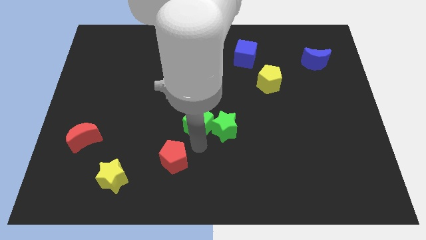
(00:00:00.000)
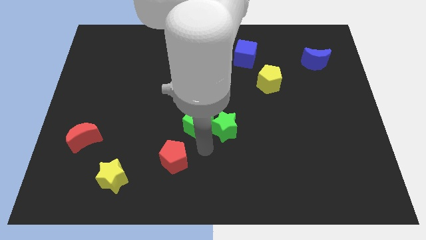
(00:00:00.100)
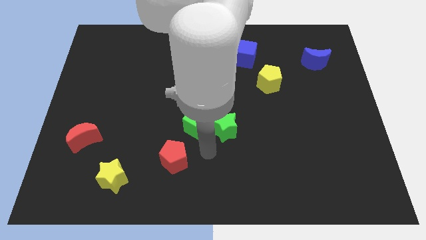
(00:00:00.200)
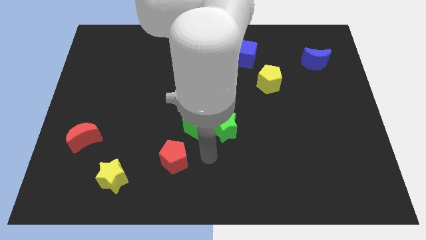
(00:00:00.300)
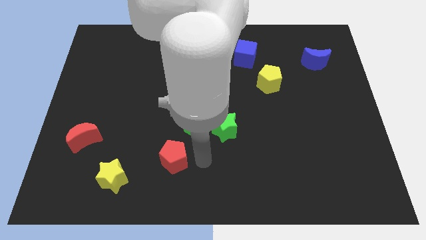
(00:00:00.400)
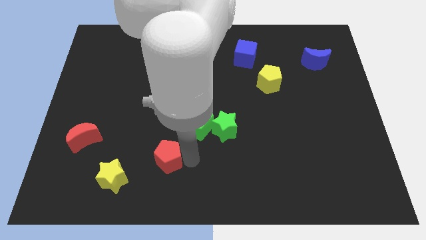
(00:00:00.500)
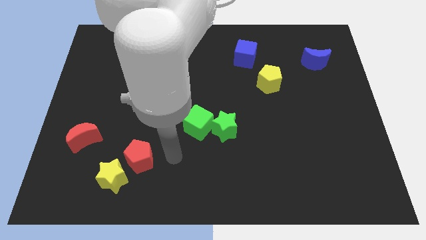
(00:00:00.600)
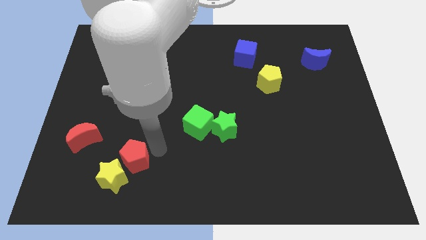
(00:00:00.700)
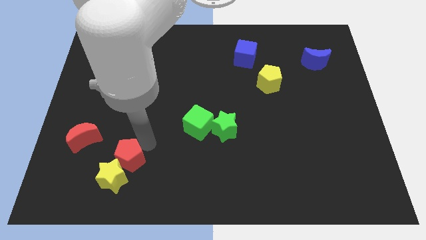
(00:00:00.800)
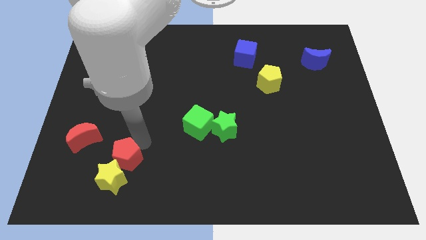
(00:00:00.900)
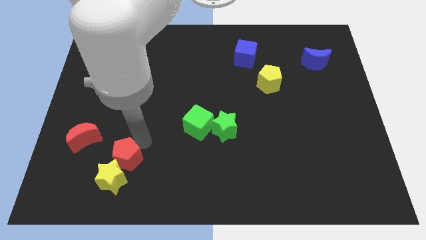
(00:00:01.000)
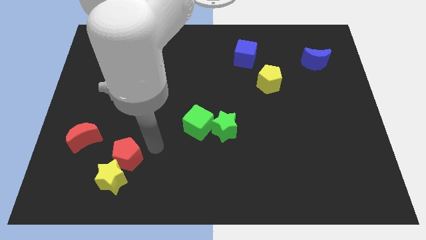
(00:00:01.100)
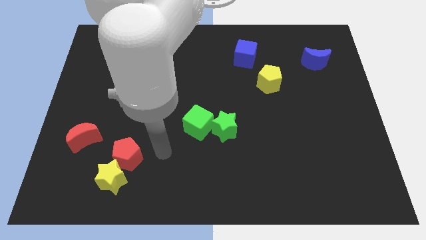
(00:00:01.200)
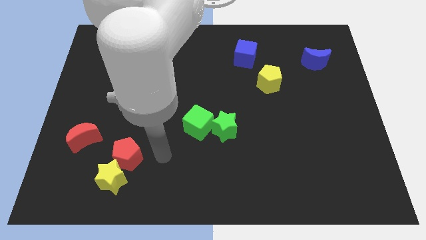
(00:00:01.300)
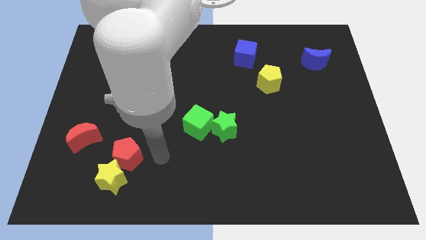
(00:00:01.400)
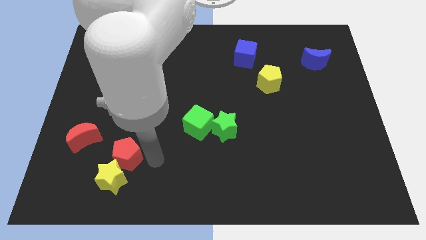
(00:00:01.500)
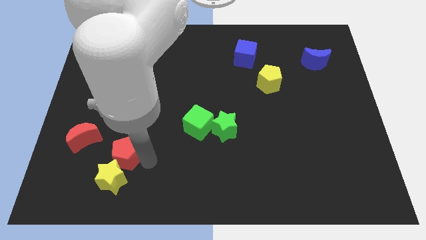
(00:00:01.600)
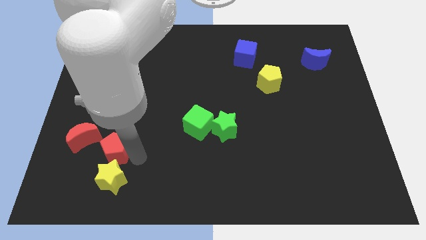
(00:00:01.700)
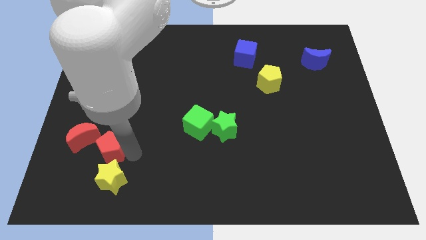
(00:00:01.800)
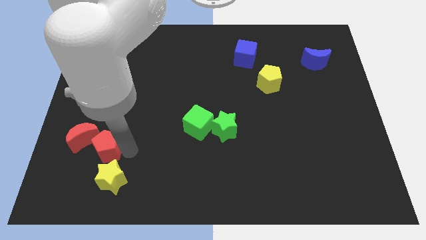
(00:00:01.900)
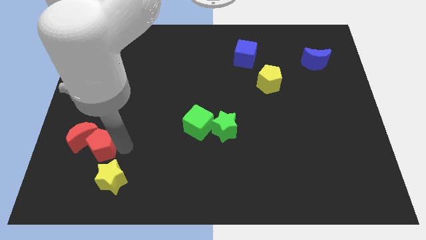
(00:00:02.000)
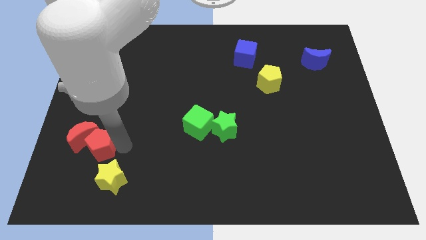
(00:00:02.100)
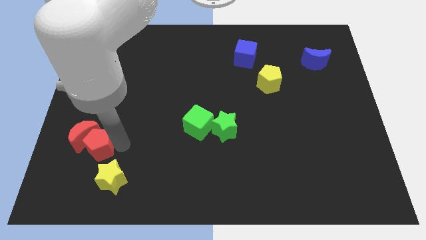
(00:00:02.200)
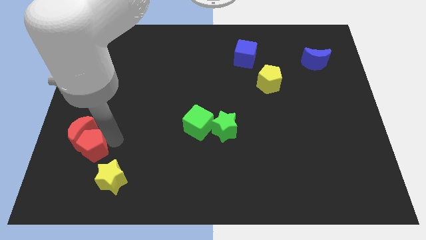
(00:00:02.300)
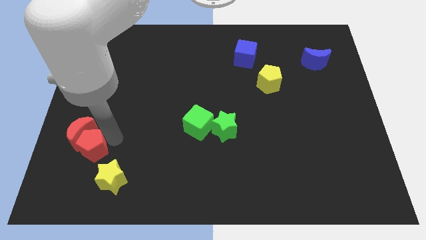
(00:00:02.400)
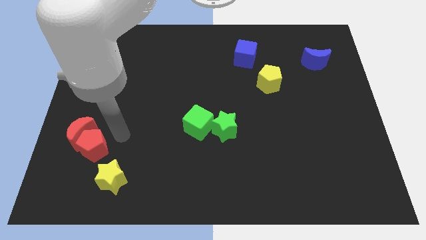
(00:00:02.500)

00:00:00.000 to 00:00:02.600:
push red pentagon towards red crescent

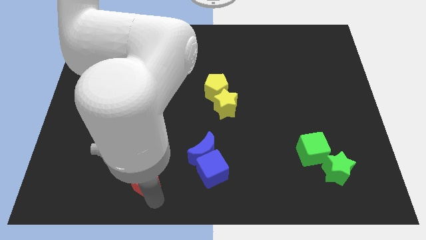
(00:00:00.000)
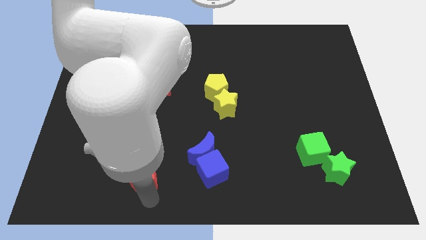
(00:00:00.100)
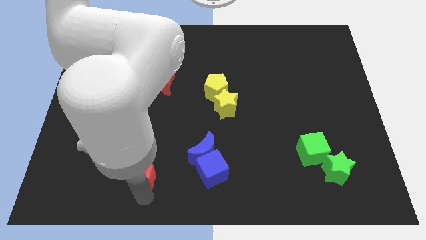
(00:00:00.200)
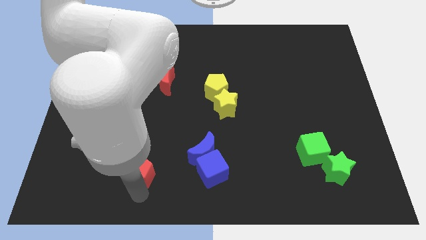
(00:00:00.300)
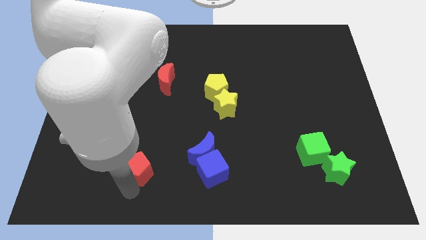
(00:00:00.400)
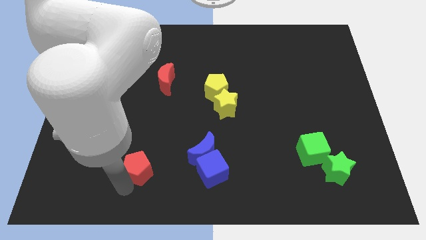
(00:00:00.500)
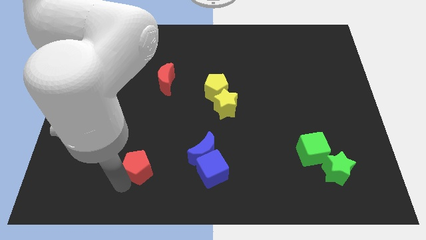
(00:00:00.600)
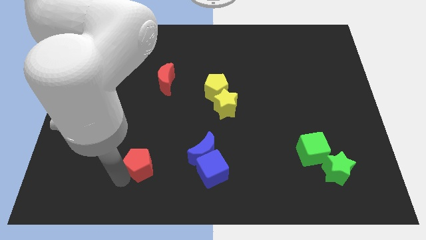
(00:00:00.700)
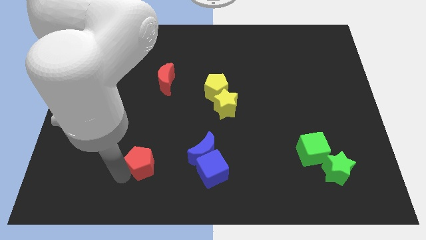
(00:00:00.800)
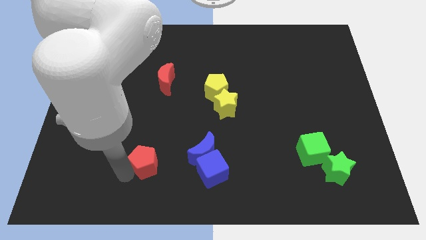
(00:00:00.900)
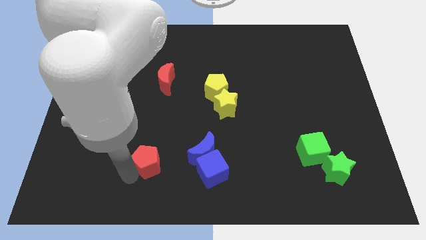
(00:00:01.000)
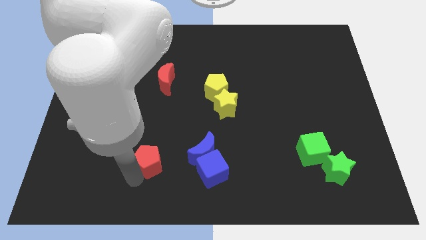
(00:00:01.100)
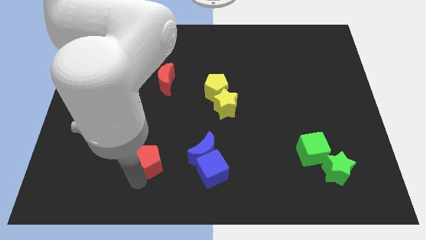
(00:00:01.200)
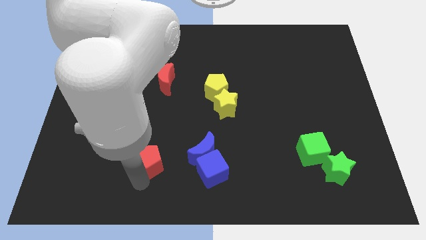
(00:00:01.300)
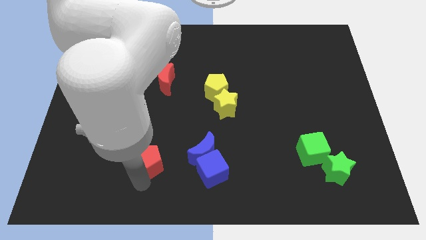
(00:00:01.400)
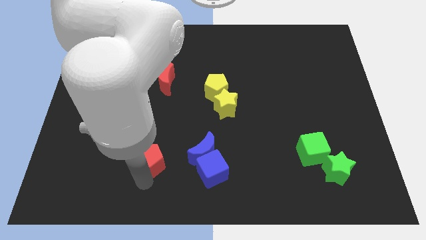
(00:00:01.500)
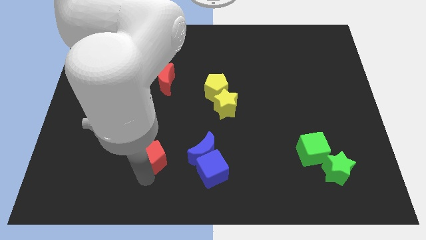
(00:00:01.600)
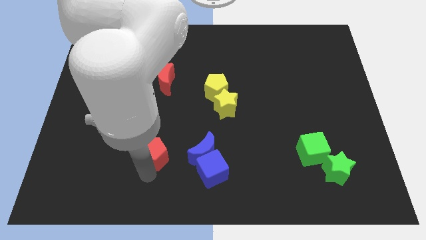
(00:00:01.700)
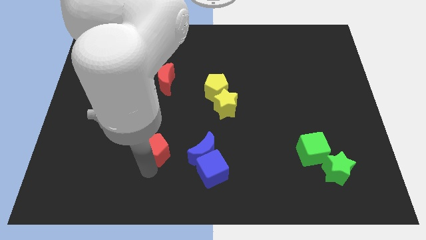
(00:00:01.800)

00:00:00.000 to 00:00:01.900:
move the red pentagon to the left of the blue crescent

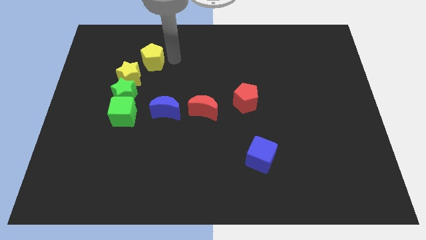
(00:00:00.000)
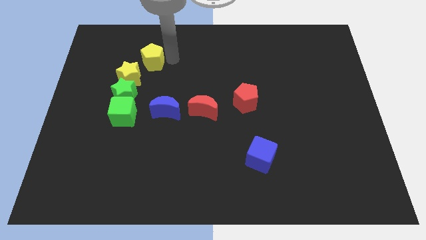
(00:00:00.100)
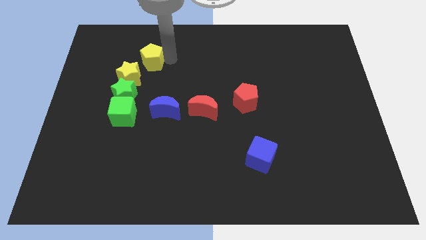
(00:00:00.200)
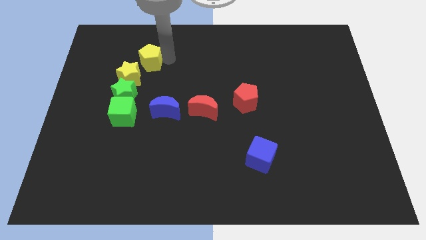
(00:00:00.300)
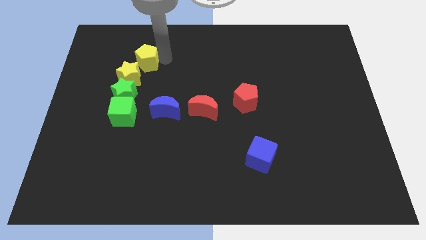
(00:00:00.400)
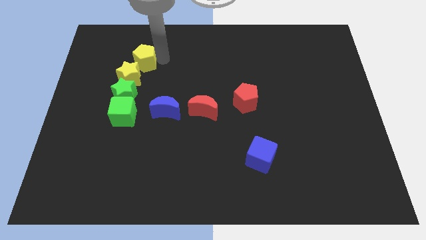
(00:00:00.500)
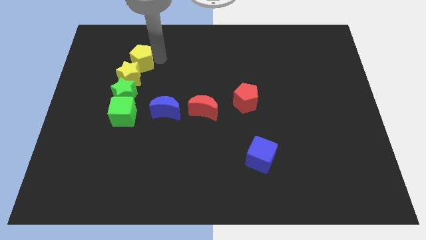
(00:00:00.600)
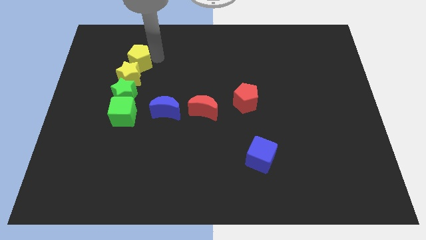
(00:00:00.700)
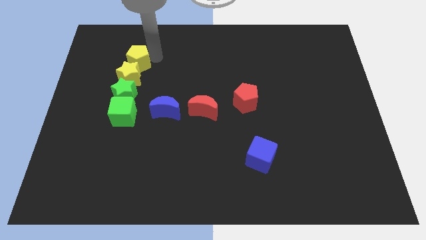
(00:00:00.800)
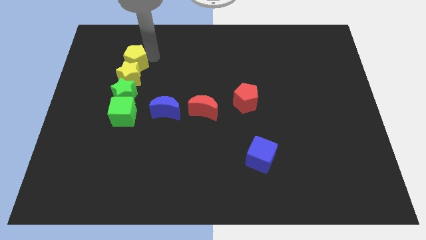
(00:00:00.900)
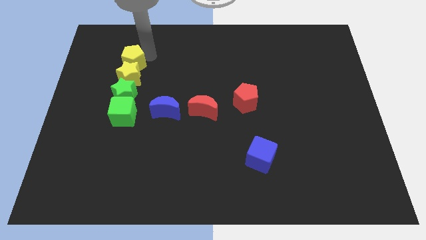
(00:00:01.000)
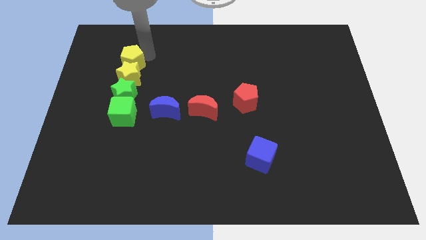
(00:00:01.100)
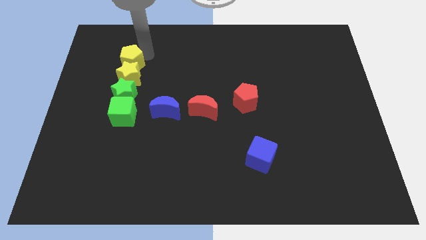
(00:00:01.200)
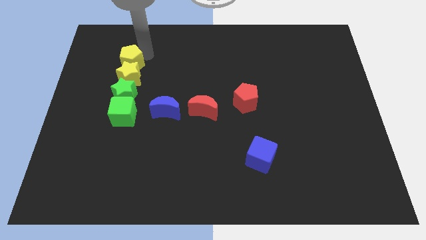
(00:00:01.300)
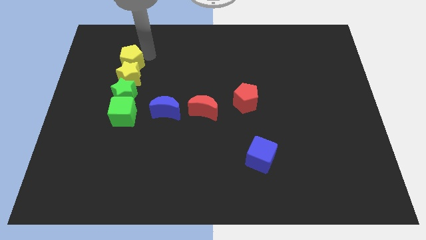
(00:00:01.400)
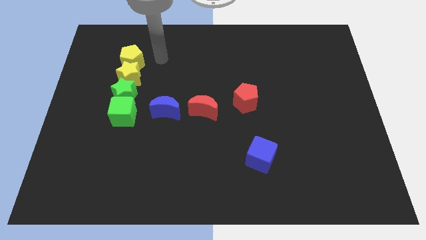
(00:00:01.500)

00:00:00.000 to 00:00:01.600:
move the yellow pentagon to the top of the yellow star

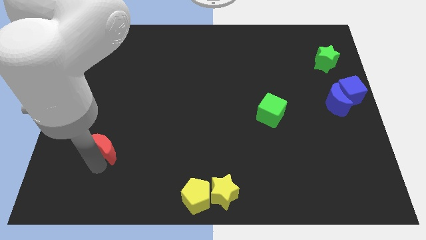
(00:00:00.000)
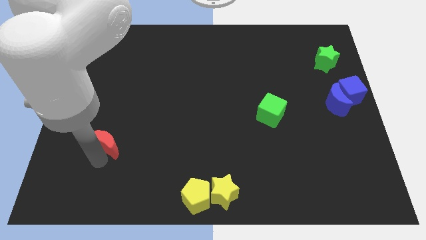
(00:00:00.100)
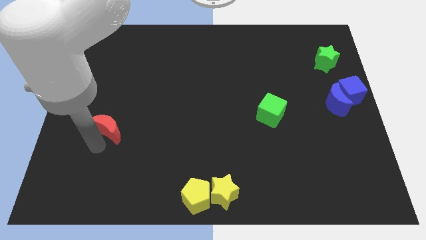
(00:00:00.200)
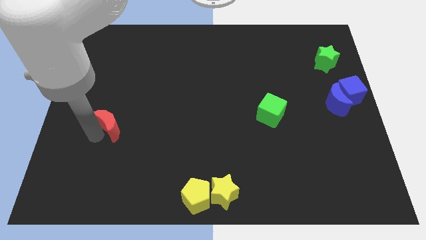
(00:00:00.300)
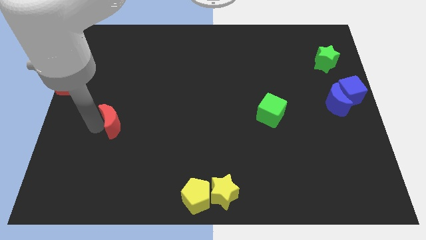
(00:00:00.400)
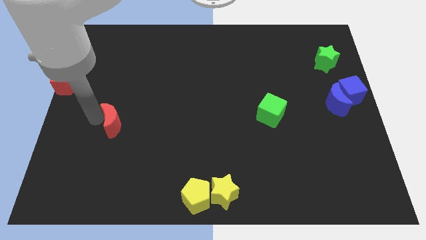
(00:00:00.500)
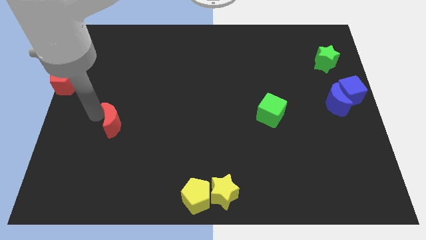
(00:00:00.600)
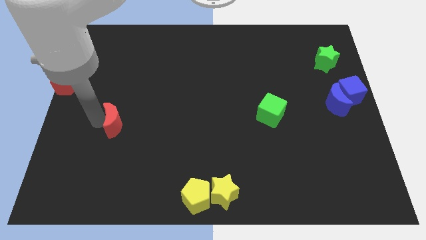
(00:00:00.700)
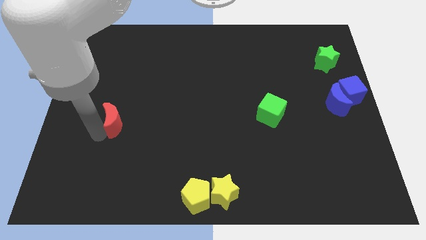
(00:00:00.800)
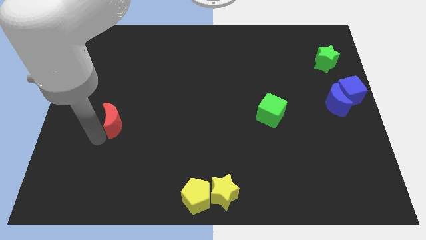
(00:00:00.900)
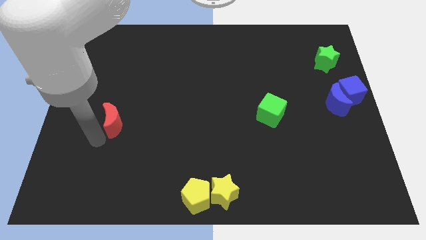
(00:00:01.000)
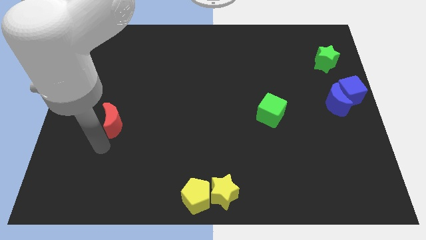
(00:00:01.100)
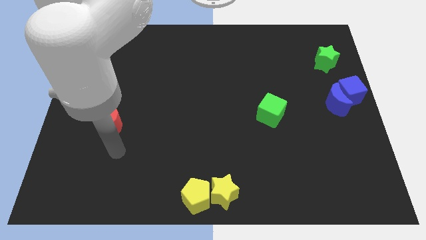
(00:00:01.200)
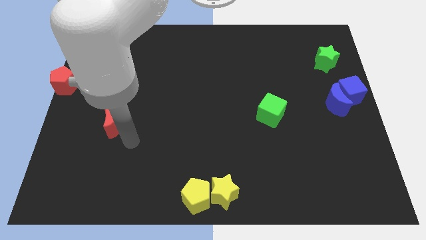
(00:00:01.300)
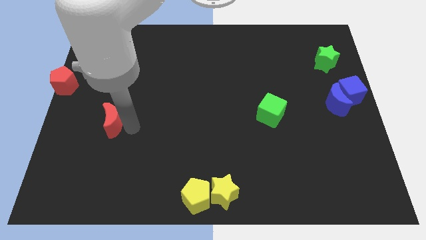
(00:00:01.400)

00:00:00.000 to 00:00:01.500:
push the red moon upwards

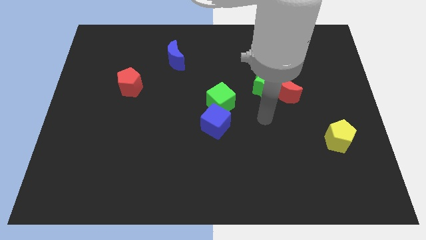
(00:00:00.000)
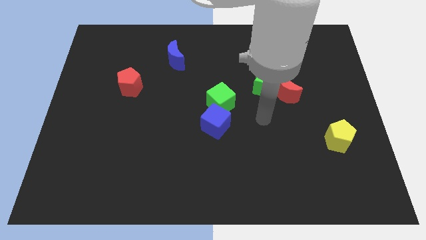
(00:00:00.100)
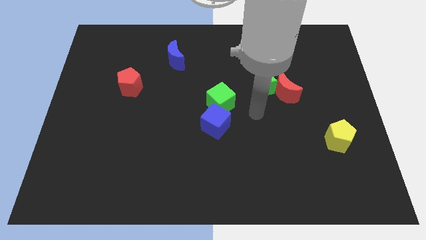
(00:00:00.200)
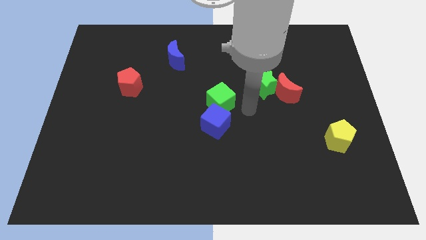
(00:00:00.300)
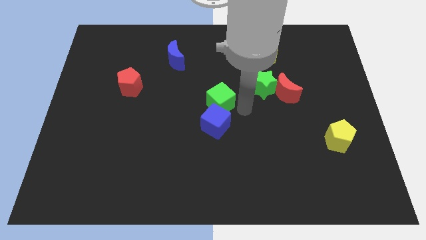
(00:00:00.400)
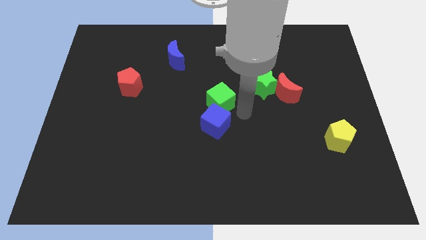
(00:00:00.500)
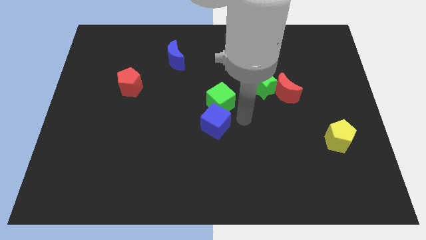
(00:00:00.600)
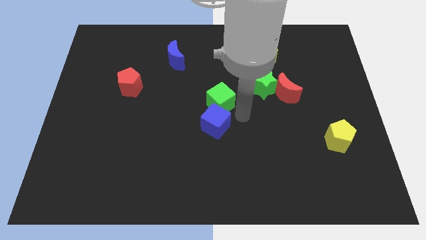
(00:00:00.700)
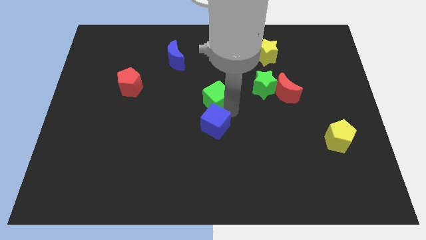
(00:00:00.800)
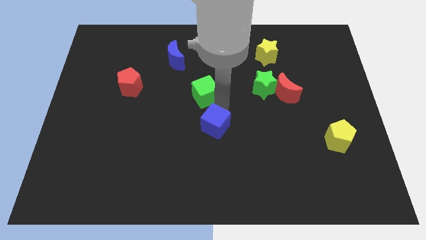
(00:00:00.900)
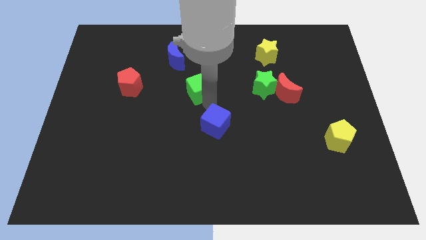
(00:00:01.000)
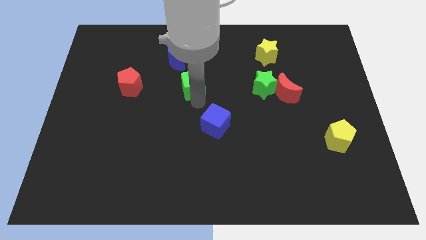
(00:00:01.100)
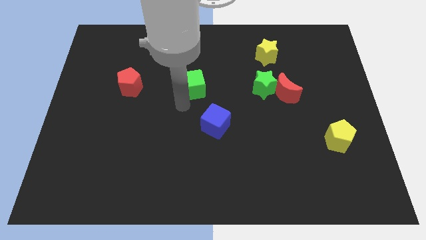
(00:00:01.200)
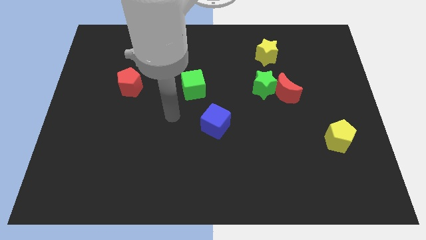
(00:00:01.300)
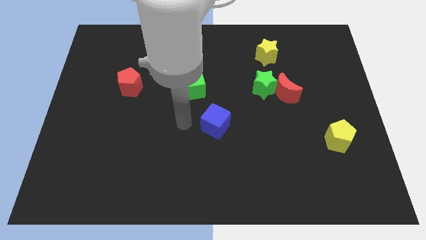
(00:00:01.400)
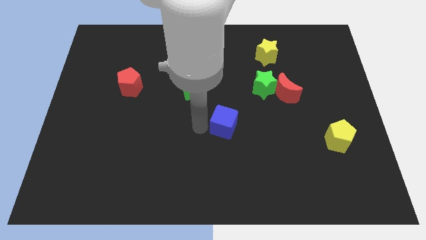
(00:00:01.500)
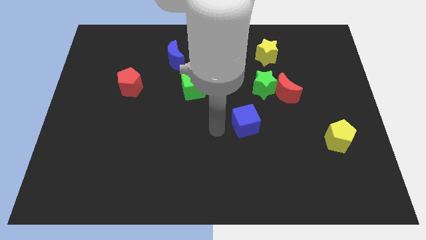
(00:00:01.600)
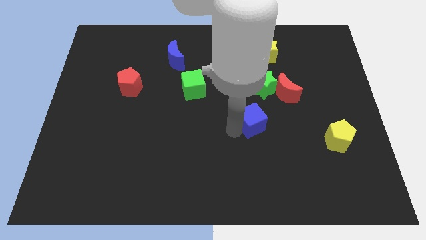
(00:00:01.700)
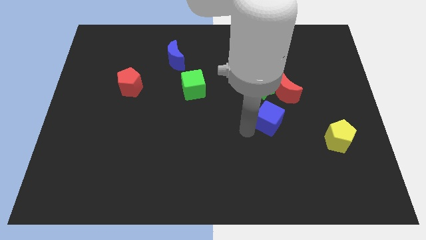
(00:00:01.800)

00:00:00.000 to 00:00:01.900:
separate the green cube and blue cube
